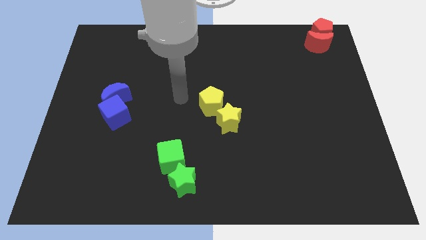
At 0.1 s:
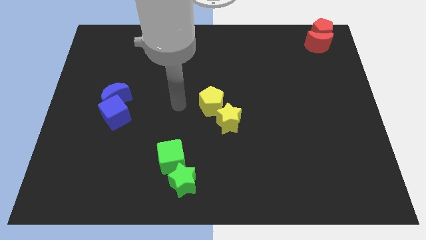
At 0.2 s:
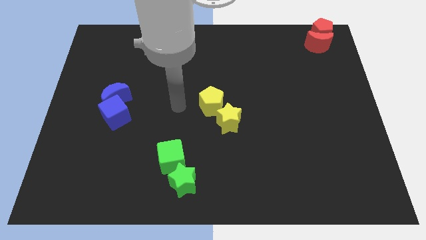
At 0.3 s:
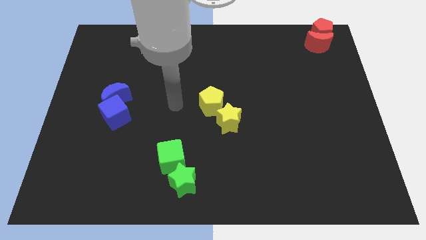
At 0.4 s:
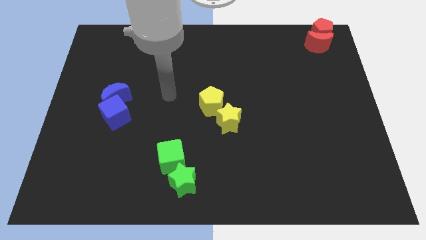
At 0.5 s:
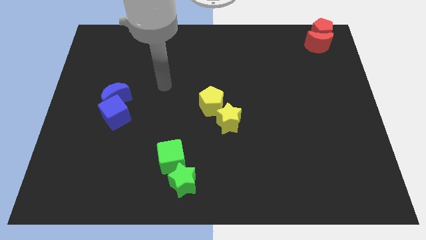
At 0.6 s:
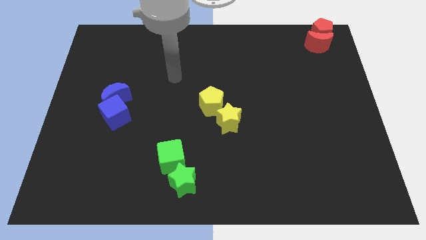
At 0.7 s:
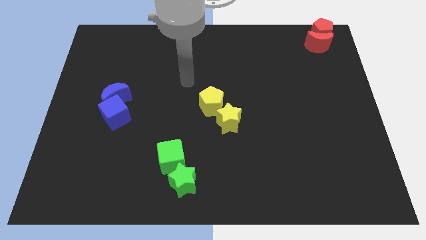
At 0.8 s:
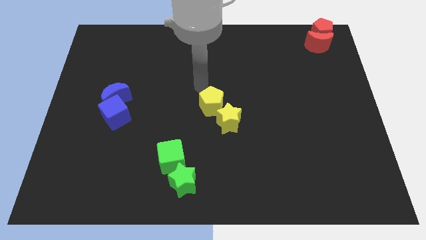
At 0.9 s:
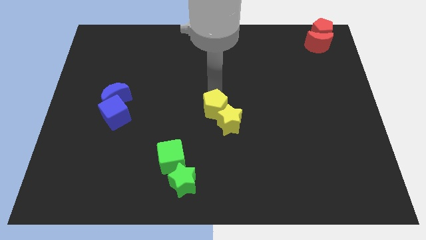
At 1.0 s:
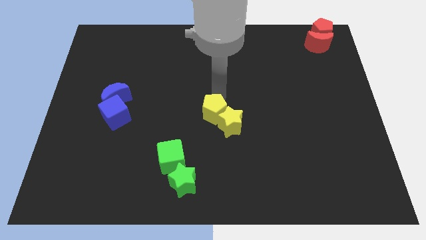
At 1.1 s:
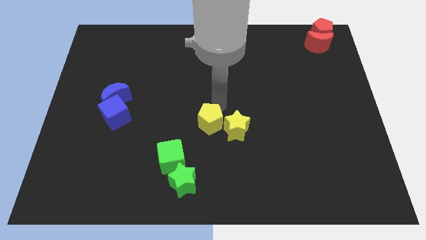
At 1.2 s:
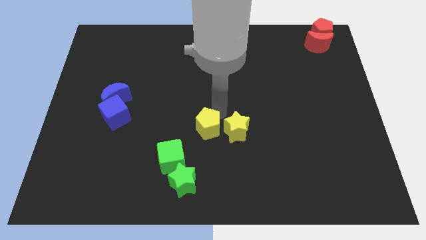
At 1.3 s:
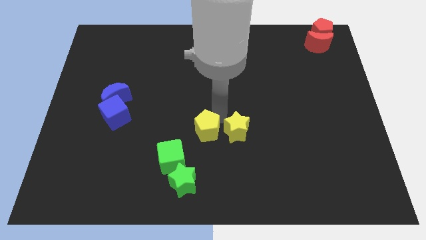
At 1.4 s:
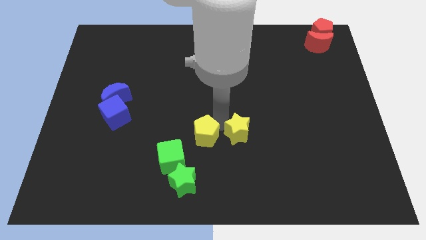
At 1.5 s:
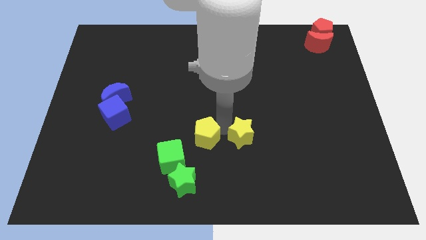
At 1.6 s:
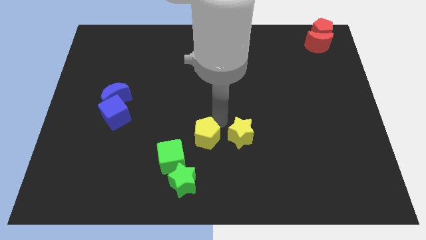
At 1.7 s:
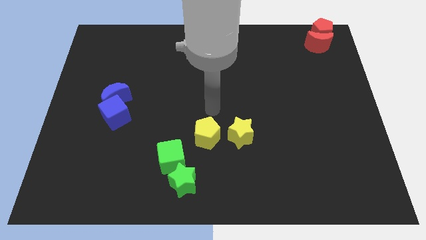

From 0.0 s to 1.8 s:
separate the yellow blocks

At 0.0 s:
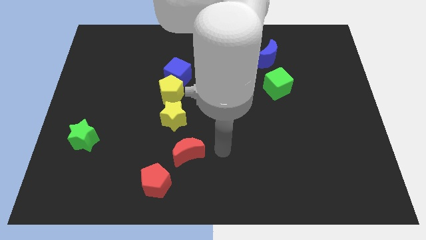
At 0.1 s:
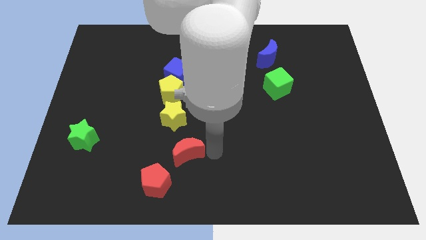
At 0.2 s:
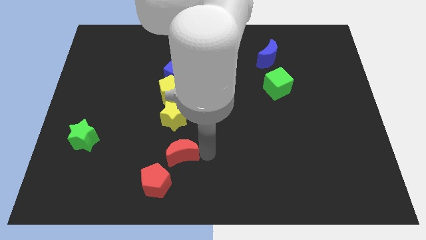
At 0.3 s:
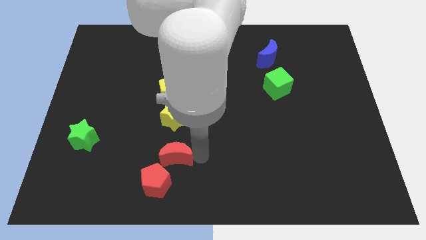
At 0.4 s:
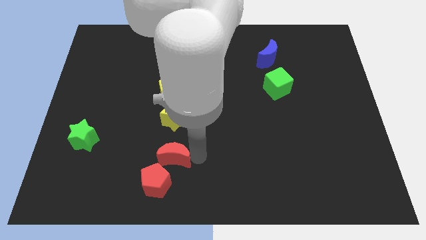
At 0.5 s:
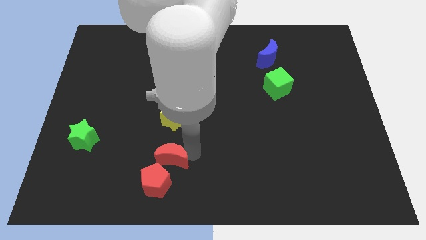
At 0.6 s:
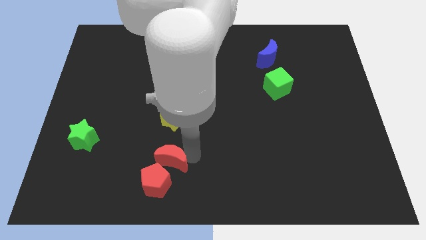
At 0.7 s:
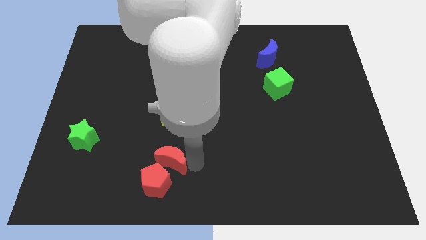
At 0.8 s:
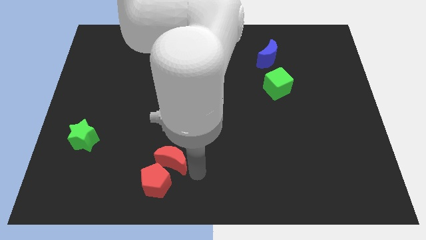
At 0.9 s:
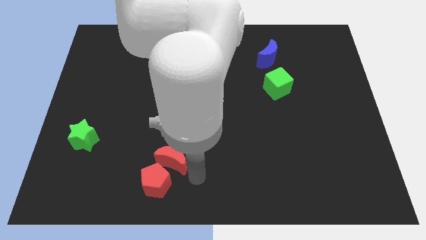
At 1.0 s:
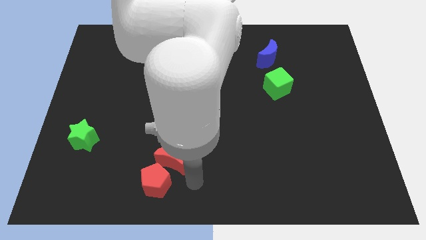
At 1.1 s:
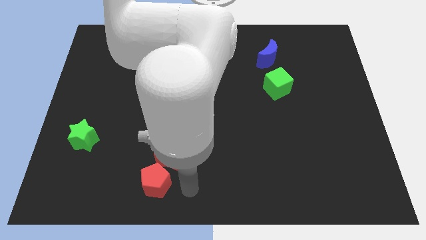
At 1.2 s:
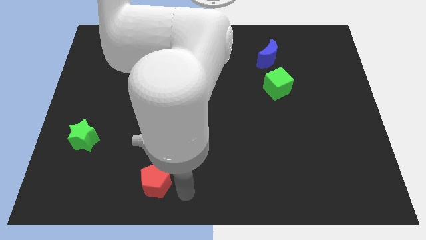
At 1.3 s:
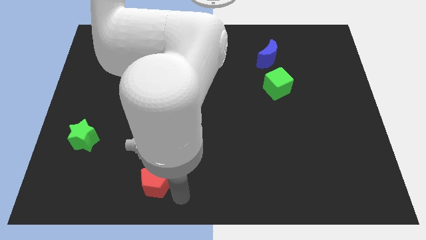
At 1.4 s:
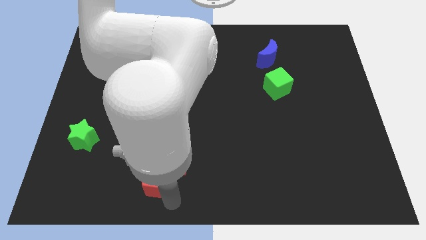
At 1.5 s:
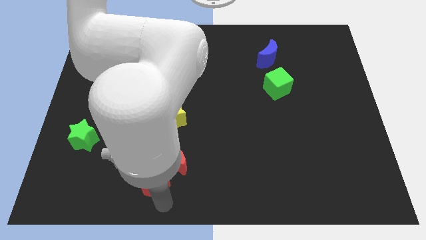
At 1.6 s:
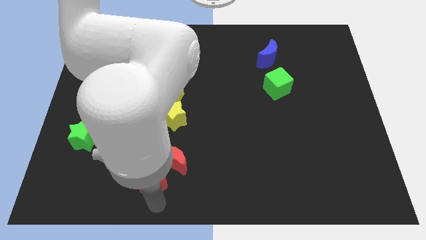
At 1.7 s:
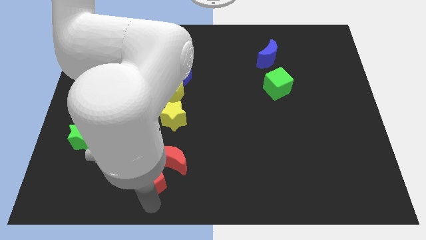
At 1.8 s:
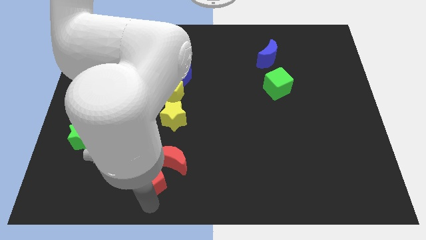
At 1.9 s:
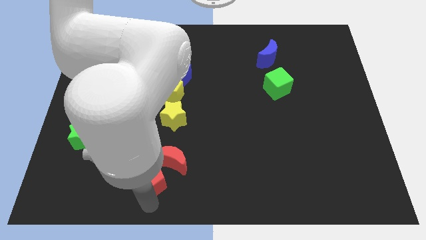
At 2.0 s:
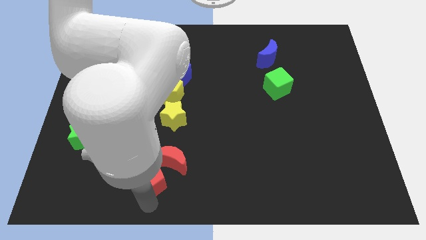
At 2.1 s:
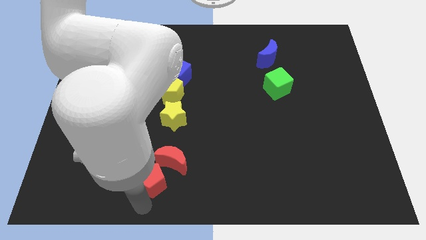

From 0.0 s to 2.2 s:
move red crescent near red pentagon

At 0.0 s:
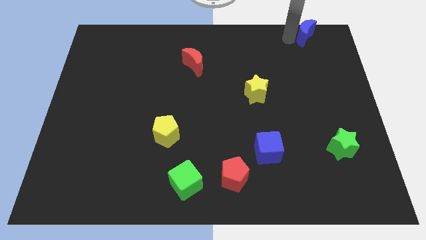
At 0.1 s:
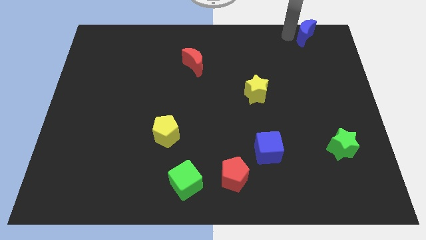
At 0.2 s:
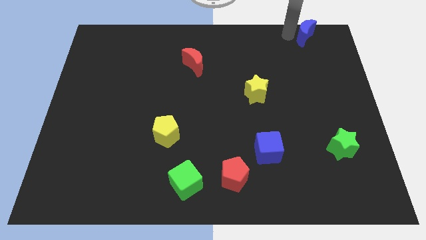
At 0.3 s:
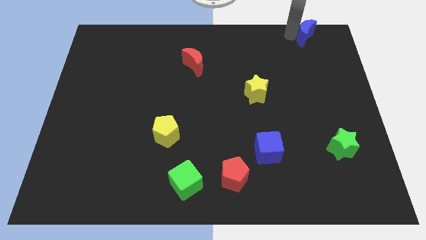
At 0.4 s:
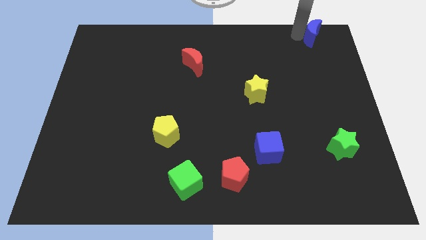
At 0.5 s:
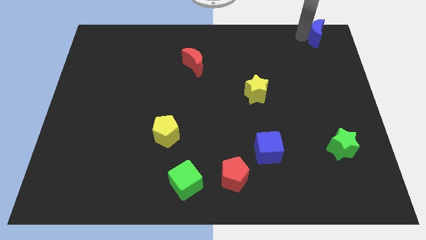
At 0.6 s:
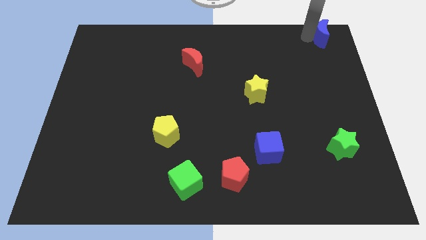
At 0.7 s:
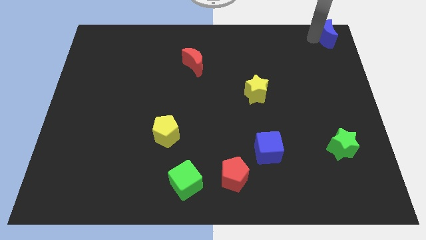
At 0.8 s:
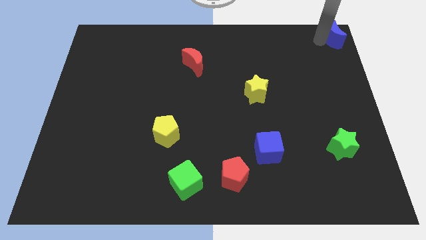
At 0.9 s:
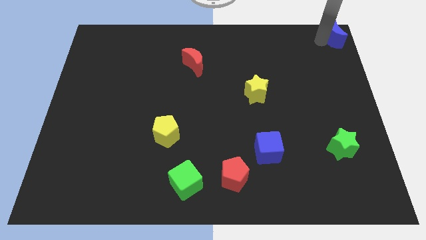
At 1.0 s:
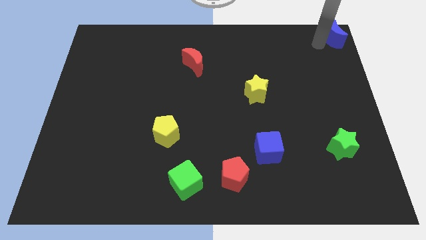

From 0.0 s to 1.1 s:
push the blue crescent to the top right corner of the board

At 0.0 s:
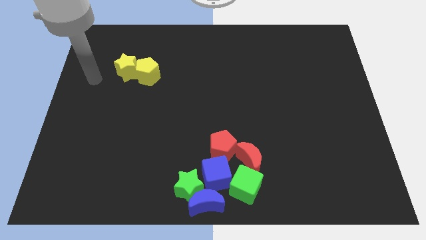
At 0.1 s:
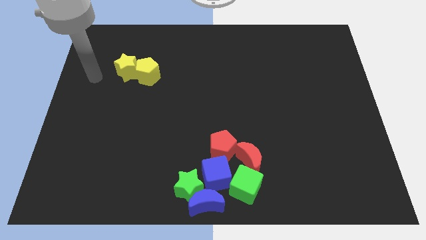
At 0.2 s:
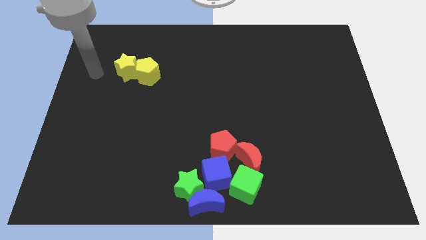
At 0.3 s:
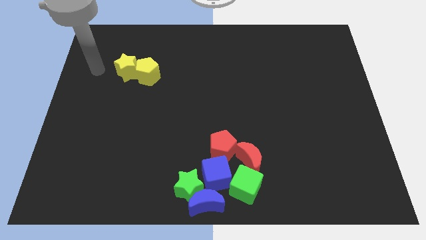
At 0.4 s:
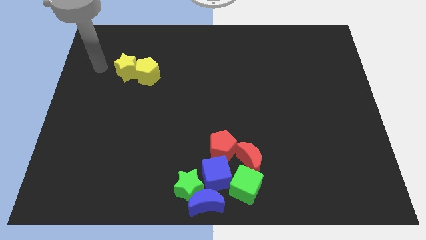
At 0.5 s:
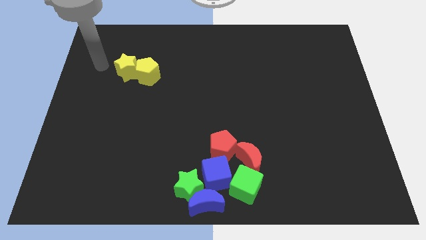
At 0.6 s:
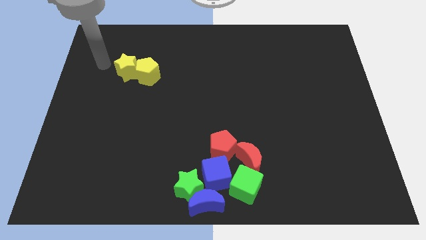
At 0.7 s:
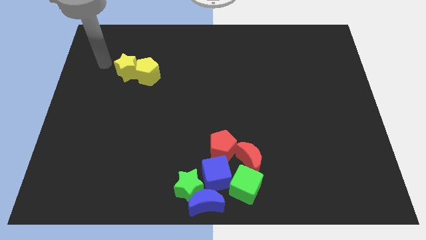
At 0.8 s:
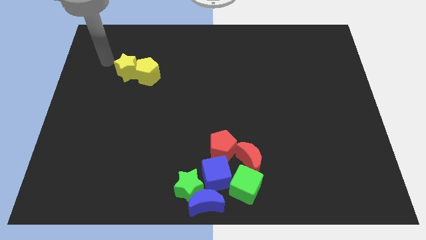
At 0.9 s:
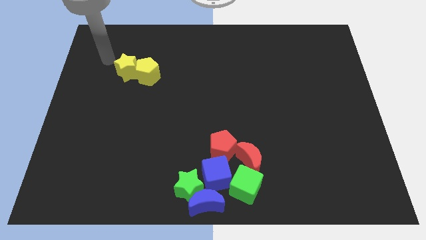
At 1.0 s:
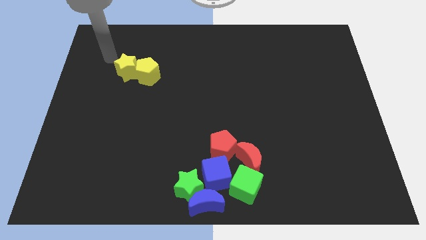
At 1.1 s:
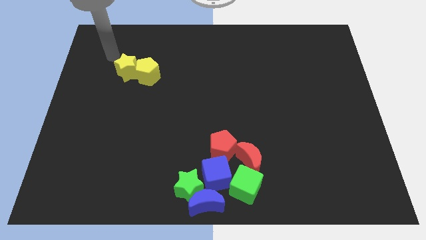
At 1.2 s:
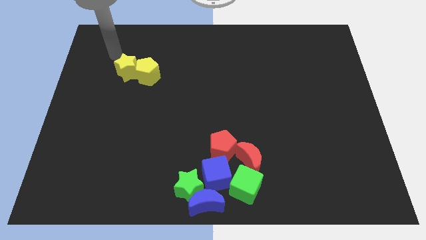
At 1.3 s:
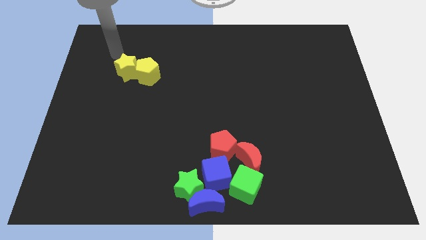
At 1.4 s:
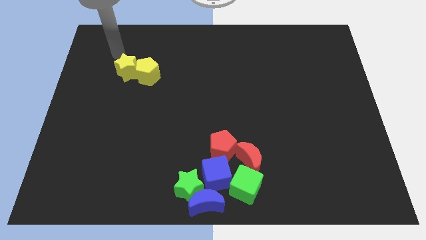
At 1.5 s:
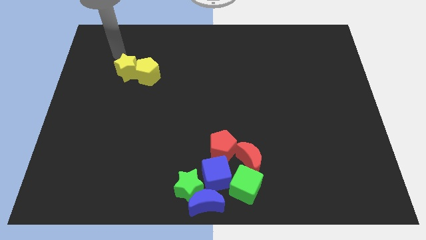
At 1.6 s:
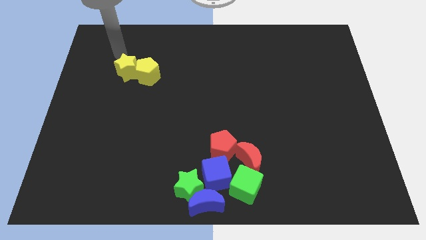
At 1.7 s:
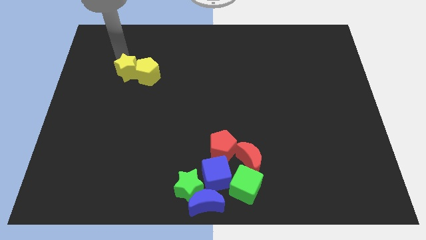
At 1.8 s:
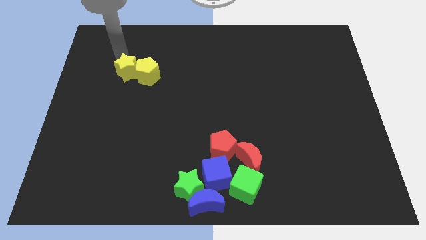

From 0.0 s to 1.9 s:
move your arm to the top of the yellow star

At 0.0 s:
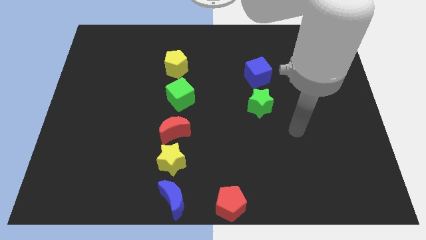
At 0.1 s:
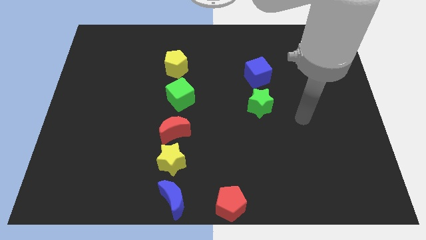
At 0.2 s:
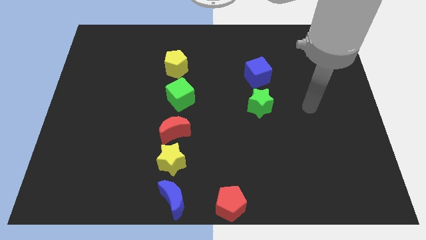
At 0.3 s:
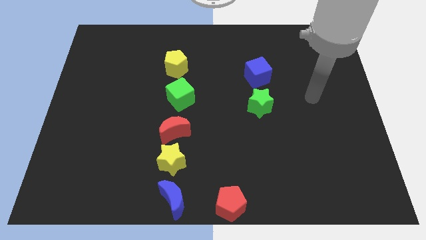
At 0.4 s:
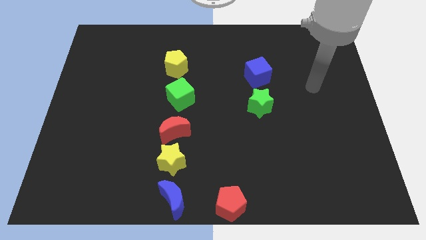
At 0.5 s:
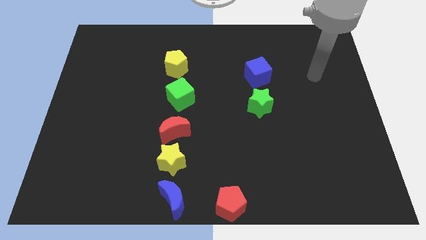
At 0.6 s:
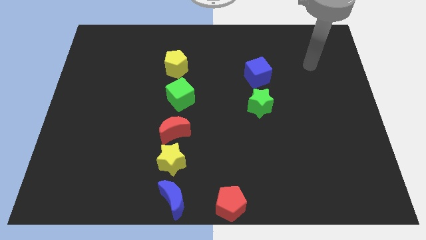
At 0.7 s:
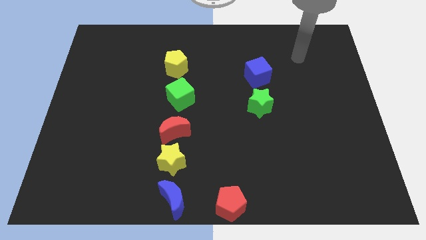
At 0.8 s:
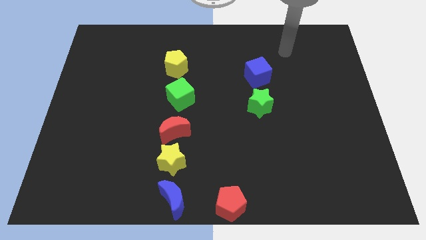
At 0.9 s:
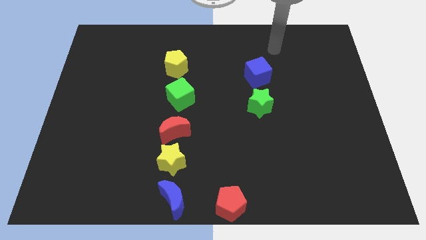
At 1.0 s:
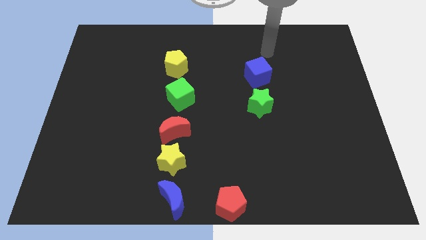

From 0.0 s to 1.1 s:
place your arm to the top of blue cube

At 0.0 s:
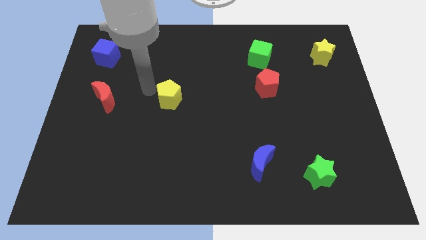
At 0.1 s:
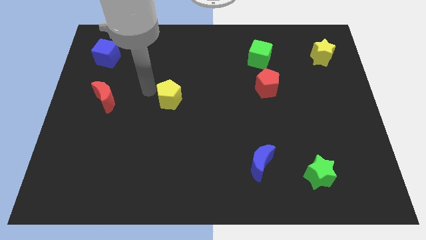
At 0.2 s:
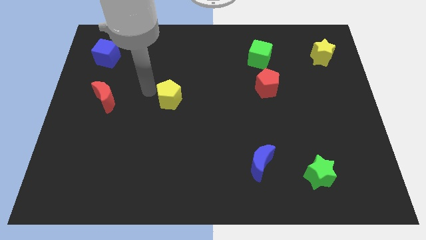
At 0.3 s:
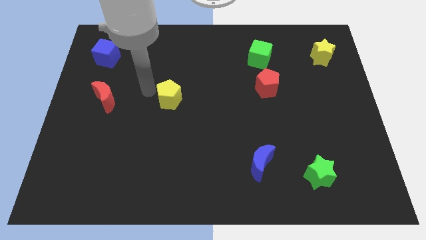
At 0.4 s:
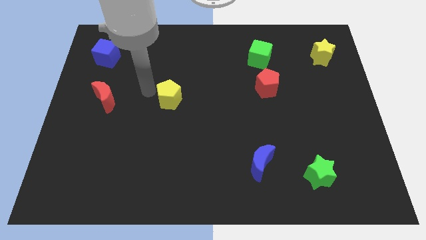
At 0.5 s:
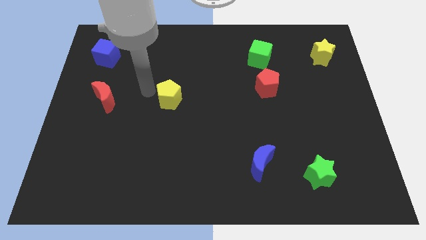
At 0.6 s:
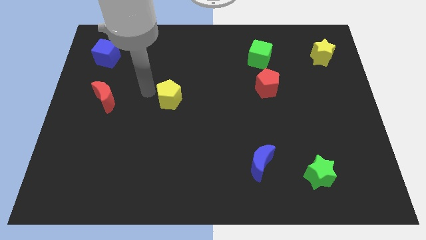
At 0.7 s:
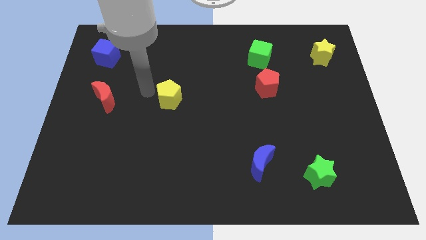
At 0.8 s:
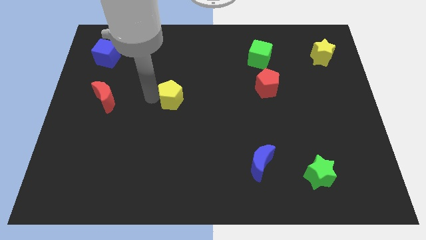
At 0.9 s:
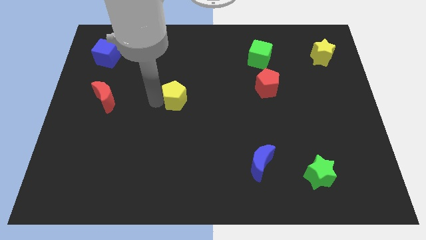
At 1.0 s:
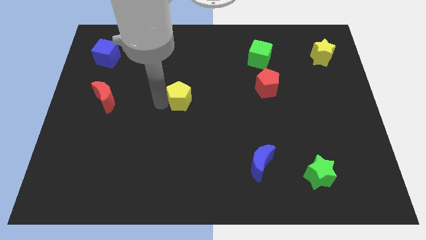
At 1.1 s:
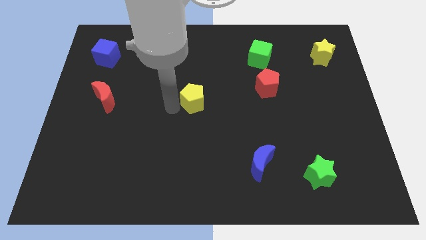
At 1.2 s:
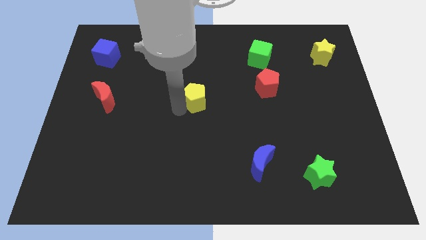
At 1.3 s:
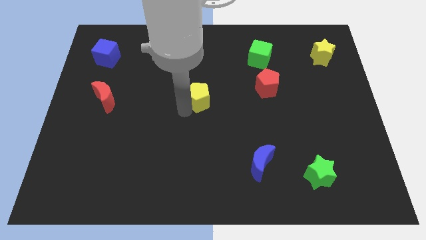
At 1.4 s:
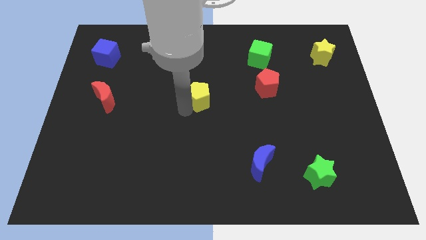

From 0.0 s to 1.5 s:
move the yellow pentagon to the center of the board
